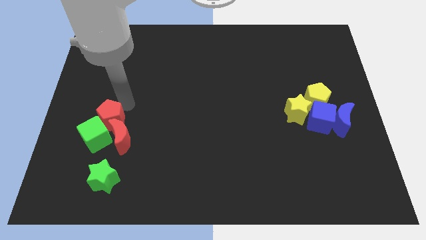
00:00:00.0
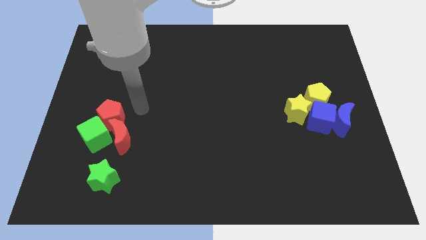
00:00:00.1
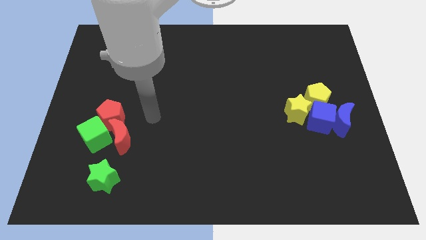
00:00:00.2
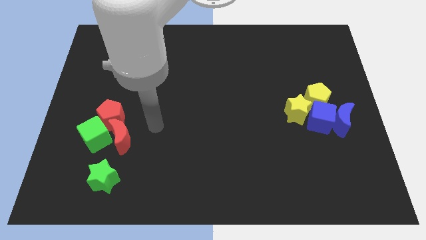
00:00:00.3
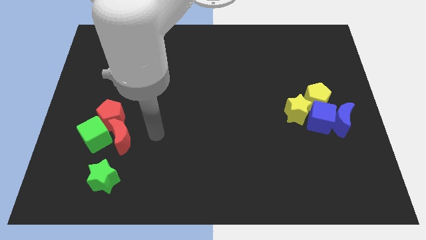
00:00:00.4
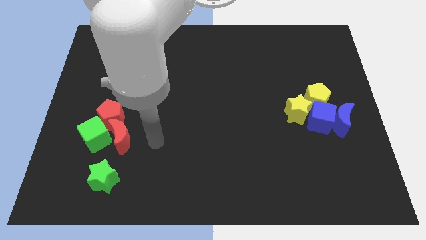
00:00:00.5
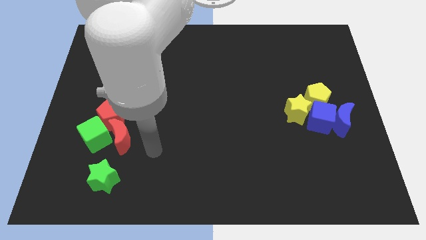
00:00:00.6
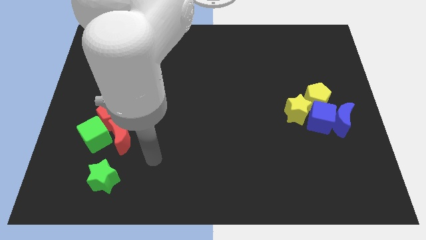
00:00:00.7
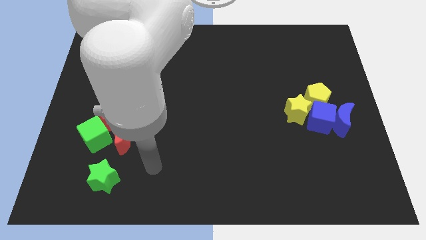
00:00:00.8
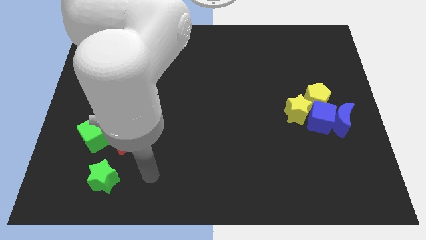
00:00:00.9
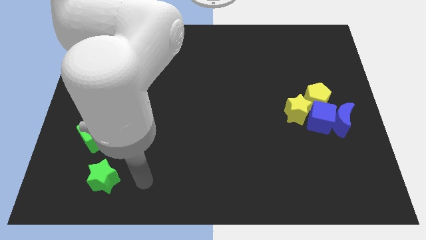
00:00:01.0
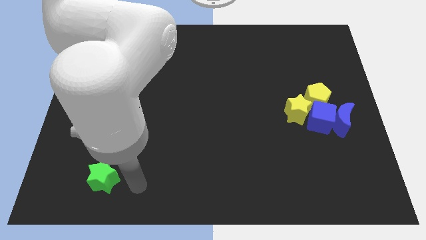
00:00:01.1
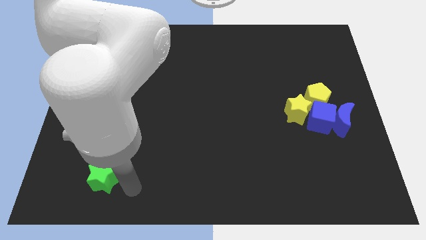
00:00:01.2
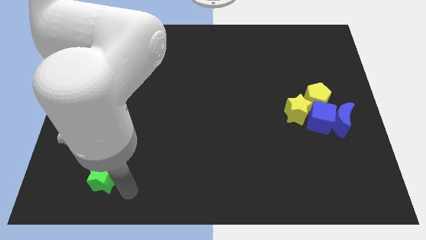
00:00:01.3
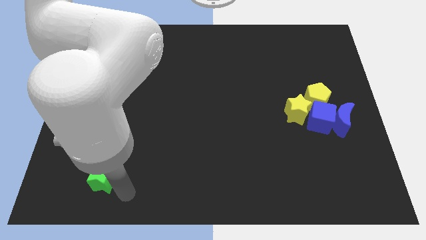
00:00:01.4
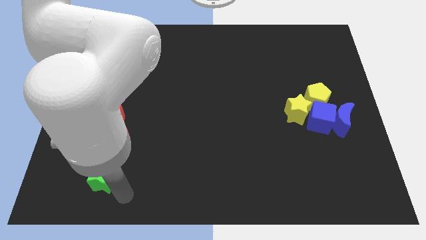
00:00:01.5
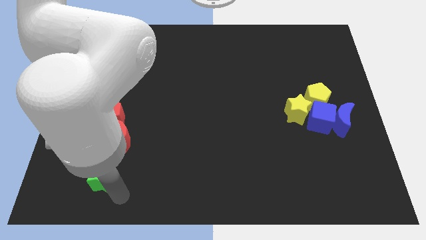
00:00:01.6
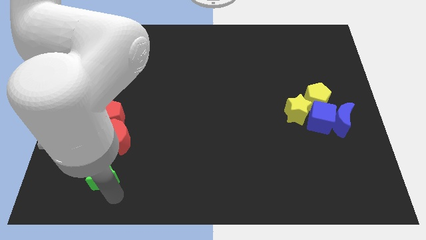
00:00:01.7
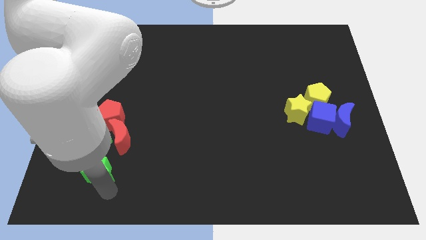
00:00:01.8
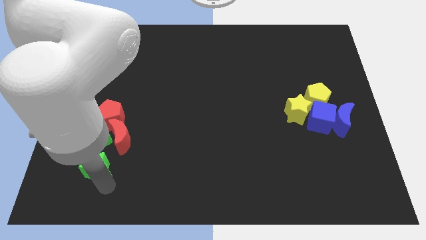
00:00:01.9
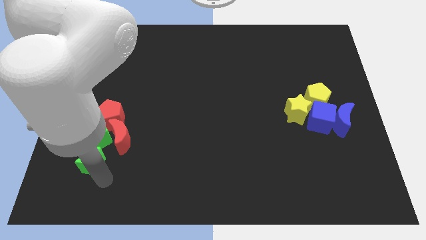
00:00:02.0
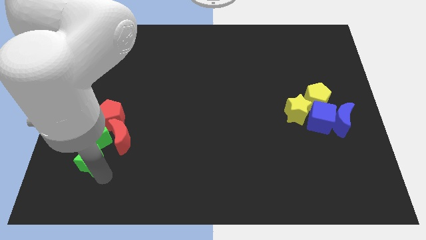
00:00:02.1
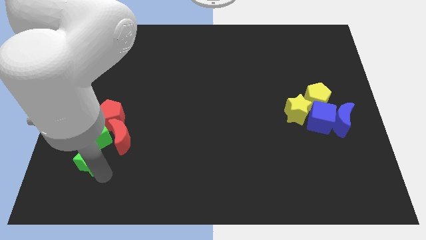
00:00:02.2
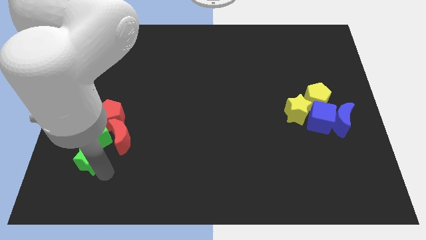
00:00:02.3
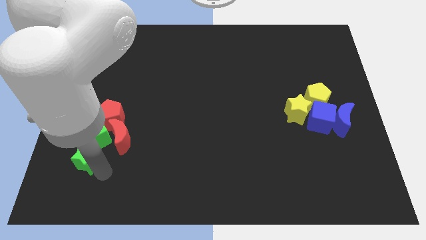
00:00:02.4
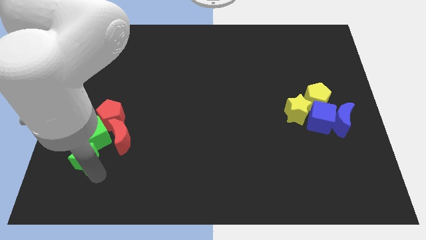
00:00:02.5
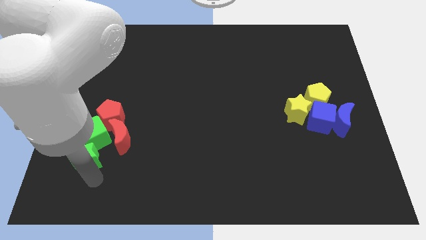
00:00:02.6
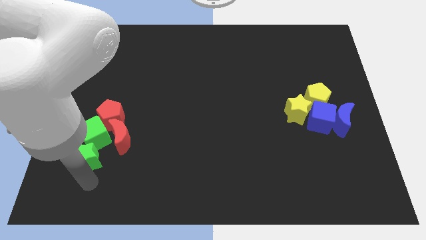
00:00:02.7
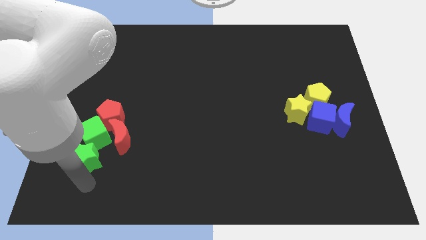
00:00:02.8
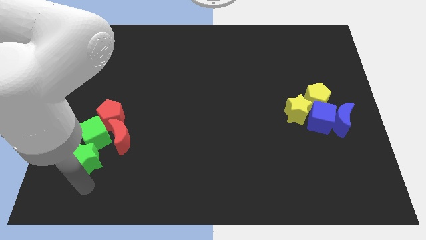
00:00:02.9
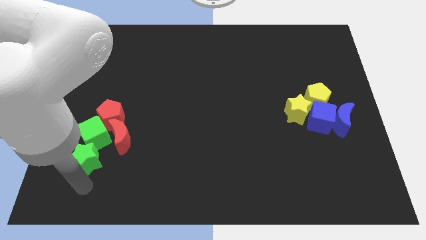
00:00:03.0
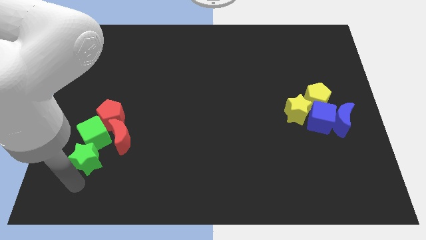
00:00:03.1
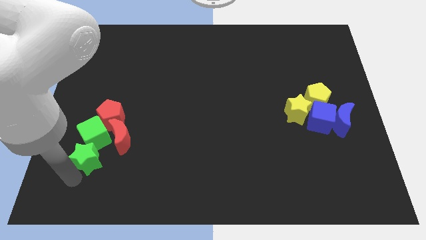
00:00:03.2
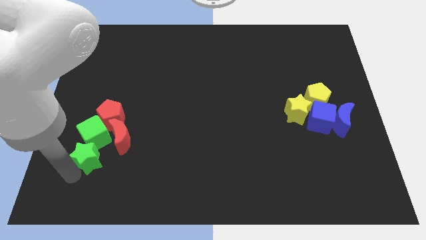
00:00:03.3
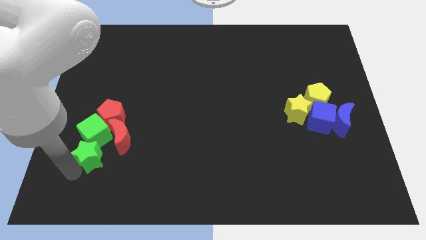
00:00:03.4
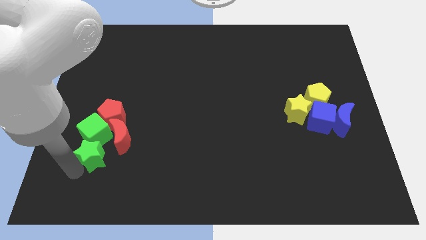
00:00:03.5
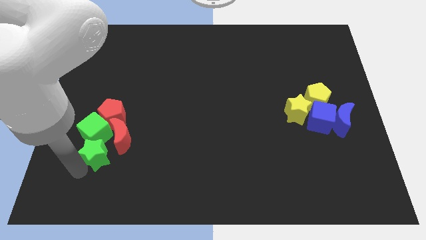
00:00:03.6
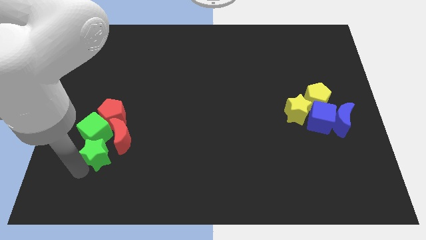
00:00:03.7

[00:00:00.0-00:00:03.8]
push the green star to the bottom of the green cube

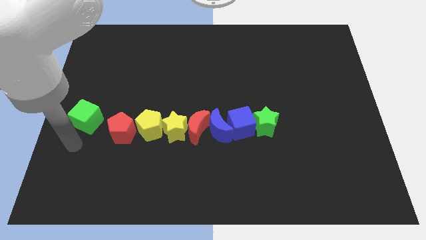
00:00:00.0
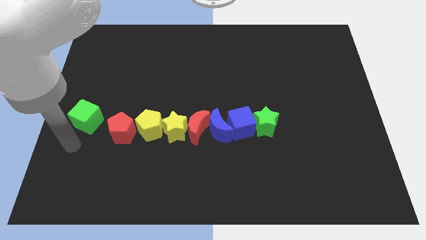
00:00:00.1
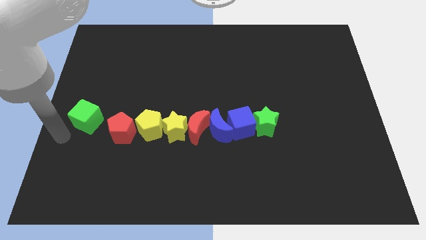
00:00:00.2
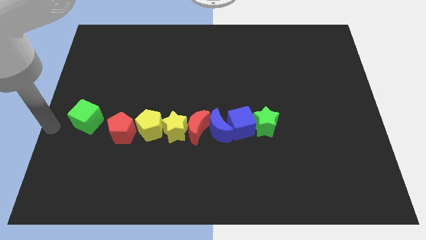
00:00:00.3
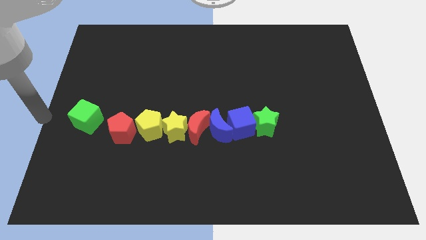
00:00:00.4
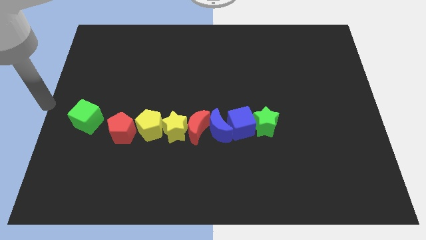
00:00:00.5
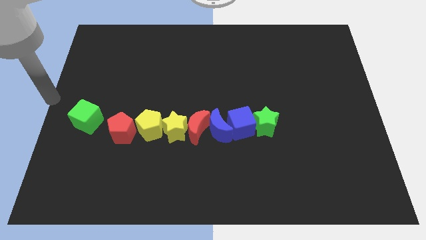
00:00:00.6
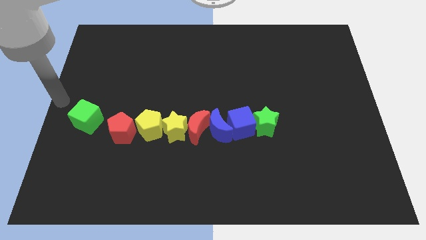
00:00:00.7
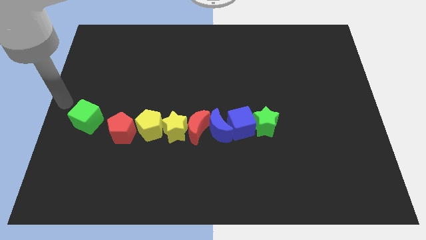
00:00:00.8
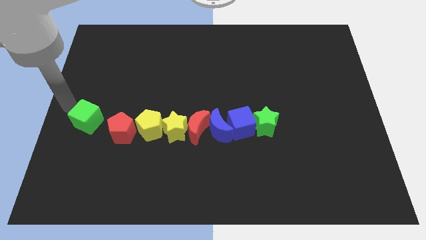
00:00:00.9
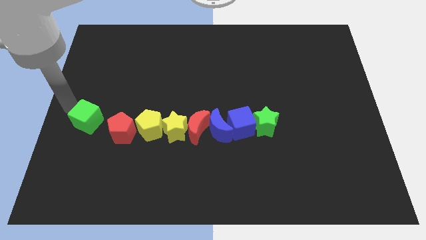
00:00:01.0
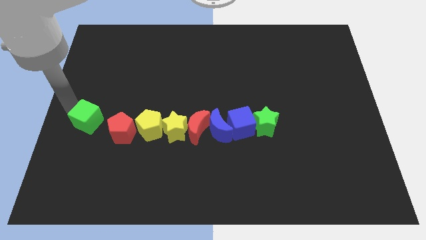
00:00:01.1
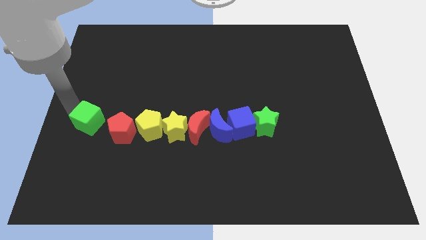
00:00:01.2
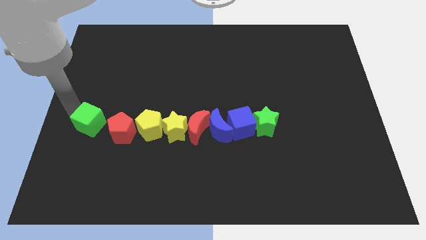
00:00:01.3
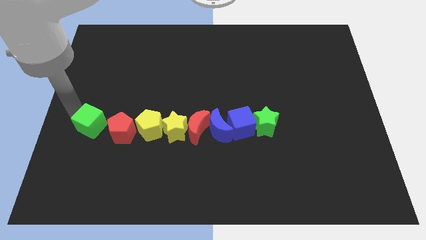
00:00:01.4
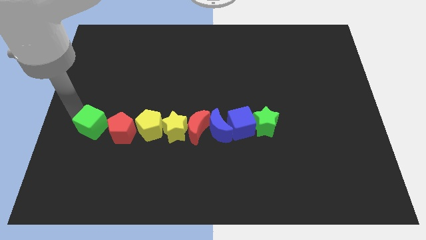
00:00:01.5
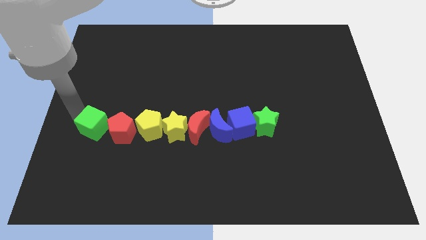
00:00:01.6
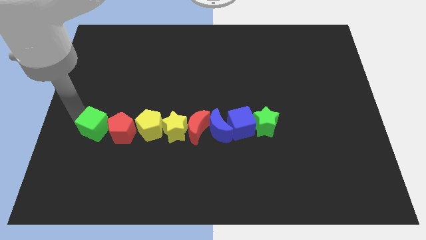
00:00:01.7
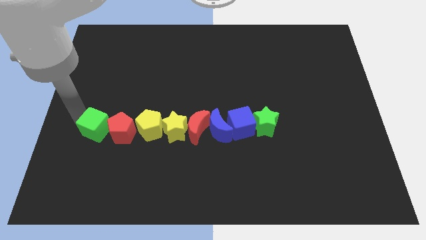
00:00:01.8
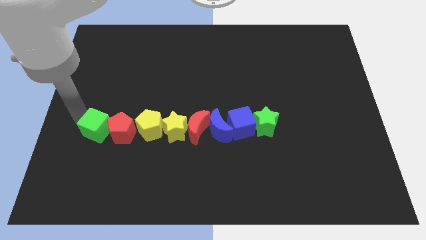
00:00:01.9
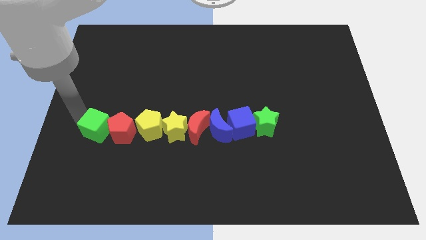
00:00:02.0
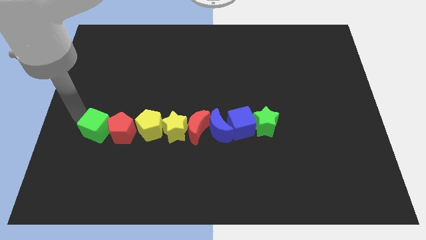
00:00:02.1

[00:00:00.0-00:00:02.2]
push the green cube to the left of the red pentagon

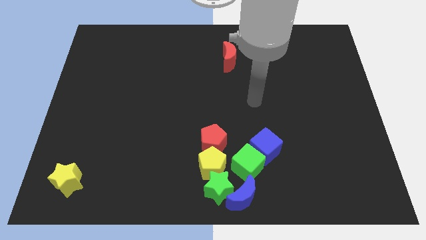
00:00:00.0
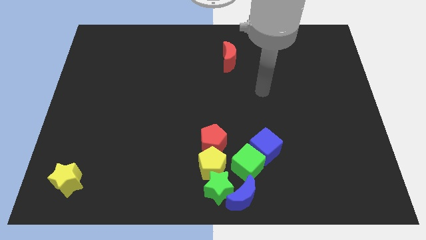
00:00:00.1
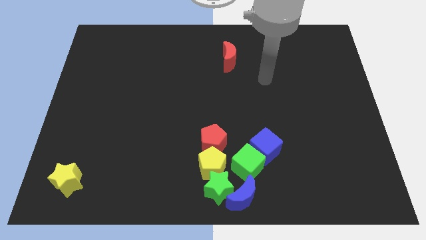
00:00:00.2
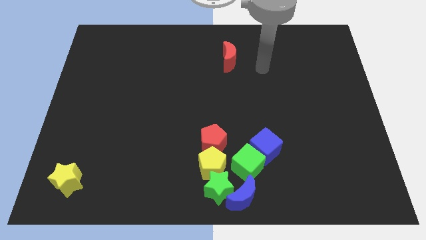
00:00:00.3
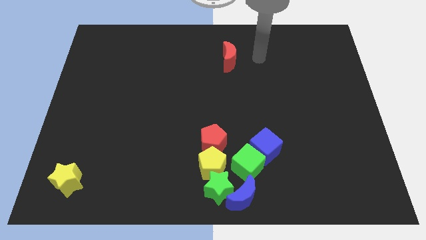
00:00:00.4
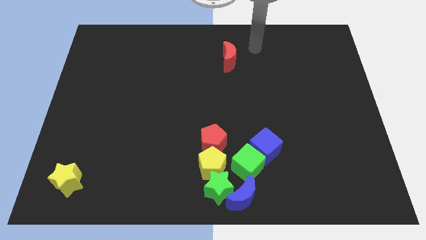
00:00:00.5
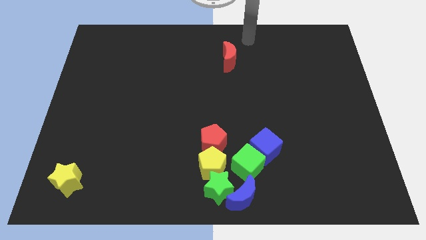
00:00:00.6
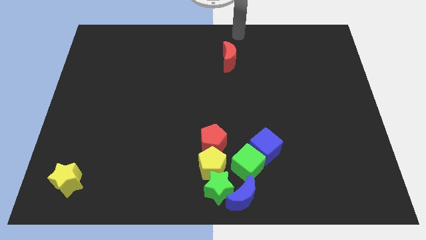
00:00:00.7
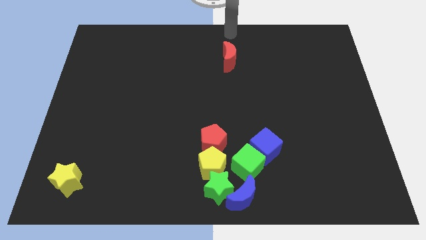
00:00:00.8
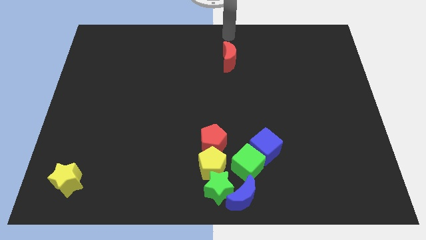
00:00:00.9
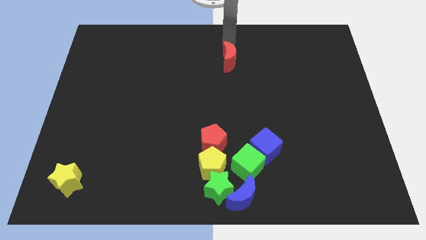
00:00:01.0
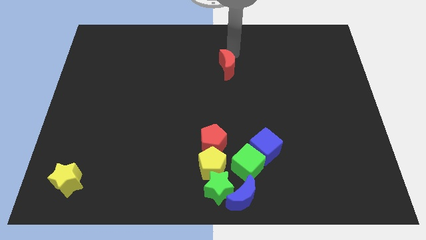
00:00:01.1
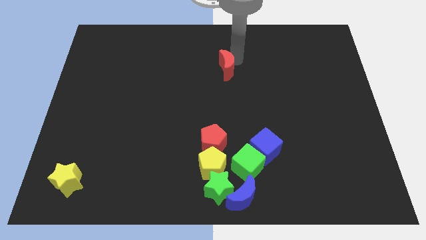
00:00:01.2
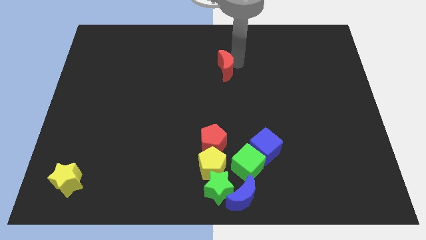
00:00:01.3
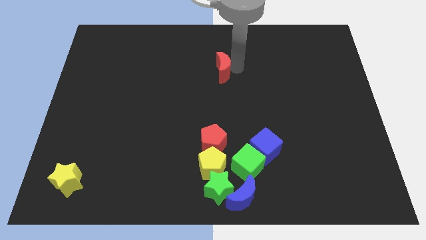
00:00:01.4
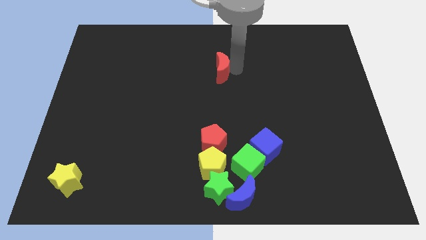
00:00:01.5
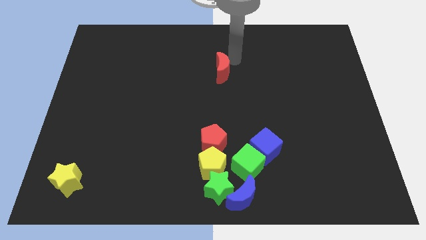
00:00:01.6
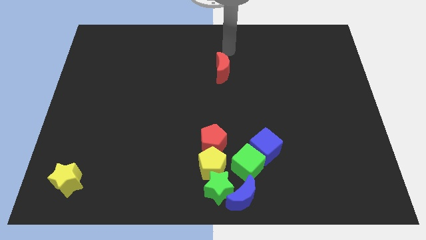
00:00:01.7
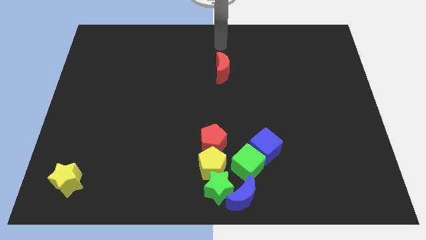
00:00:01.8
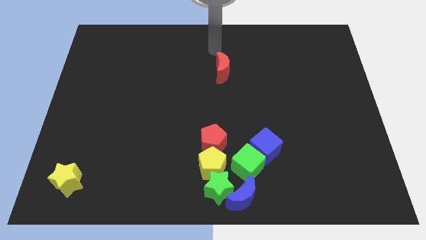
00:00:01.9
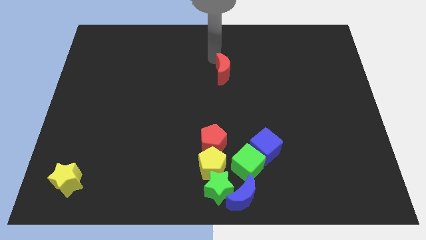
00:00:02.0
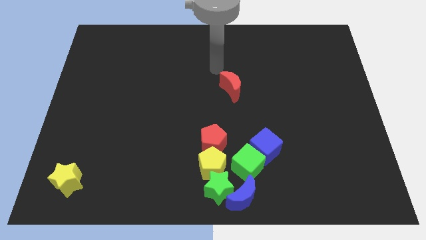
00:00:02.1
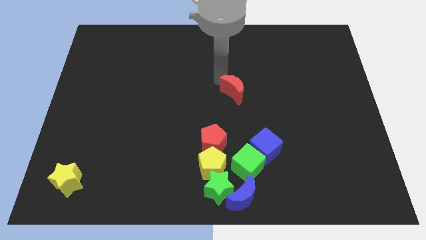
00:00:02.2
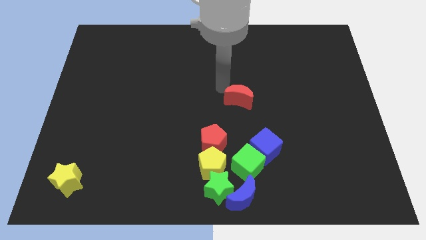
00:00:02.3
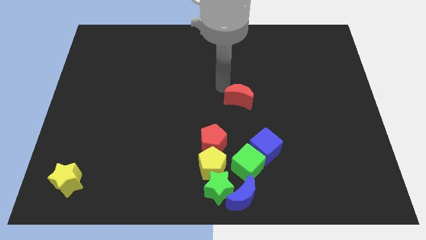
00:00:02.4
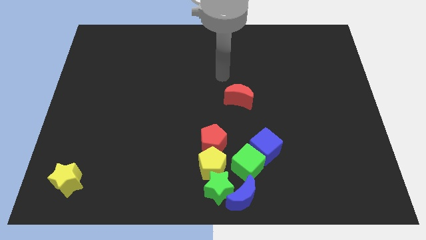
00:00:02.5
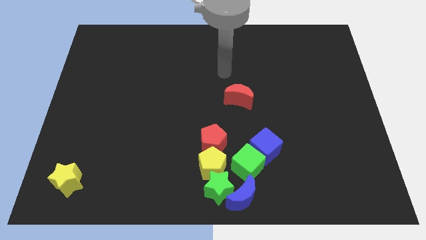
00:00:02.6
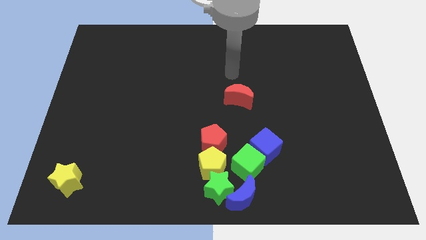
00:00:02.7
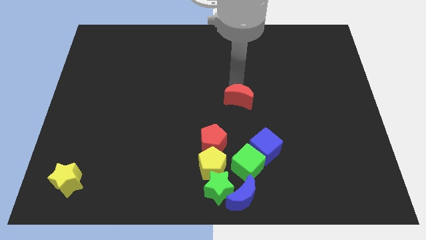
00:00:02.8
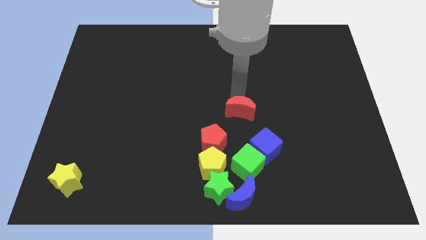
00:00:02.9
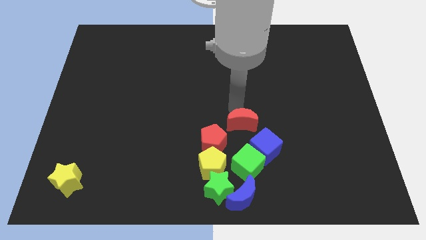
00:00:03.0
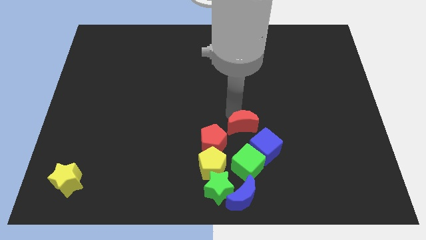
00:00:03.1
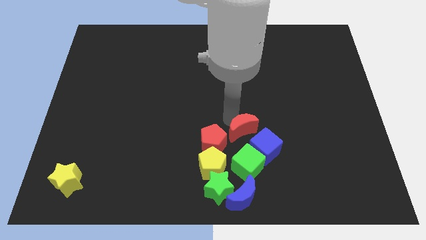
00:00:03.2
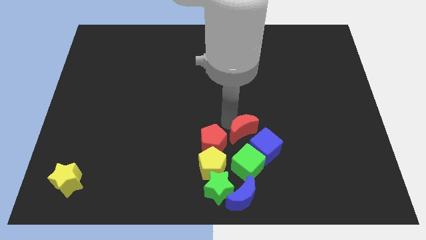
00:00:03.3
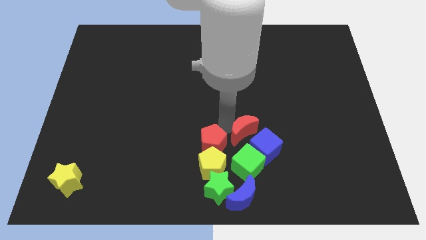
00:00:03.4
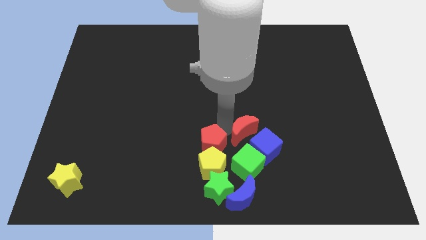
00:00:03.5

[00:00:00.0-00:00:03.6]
push red crescent to the top right side of the red pentagon
